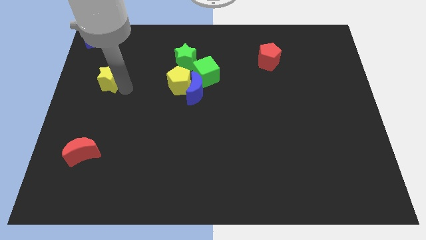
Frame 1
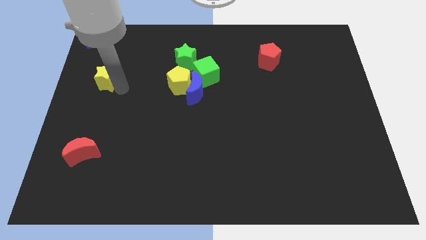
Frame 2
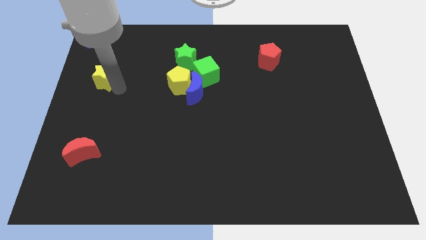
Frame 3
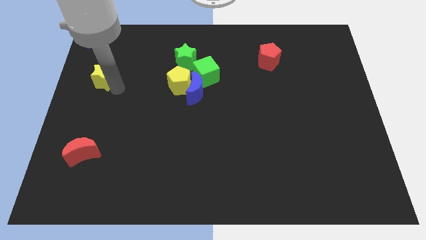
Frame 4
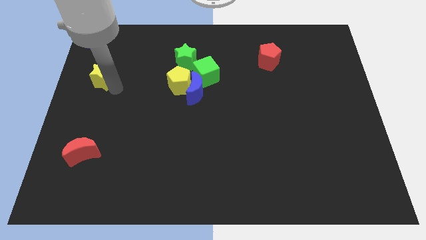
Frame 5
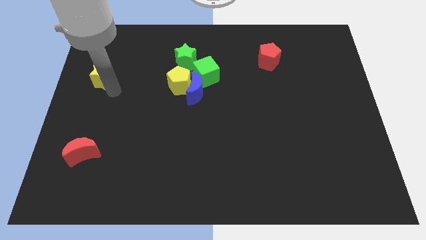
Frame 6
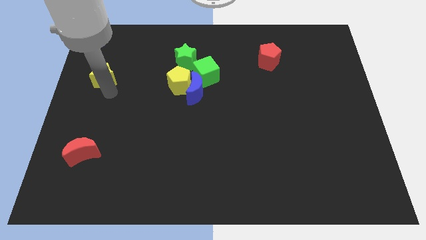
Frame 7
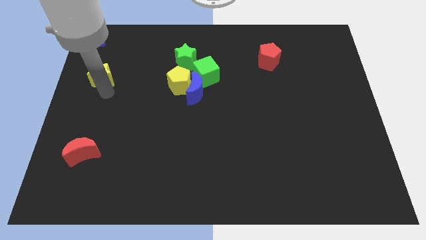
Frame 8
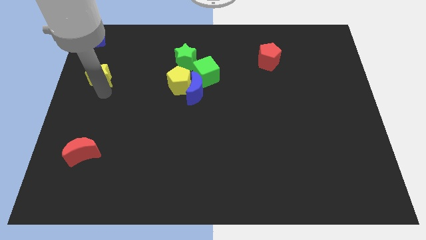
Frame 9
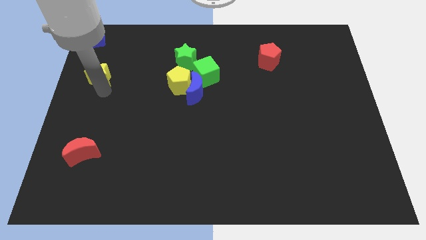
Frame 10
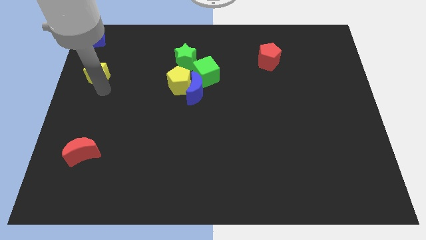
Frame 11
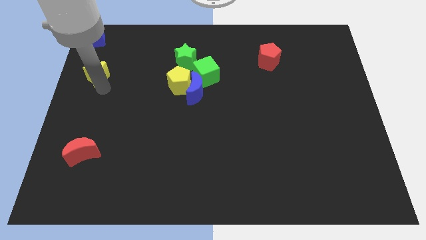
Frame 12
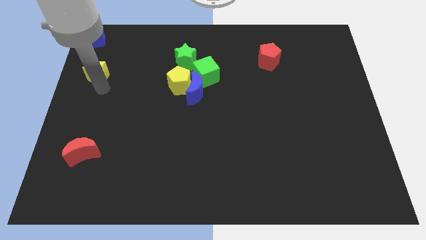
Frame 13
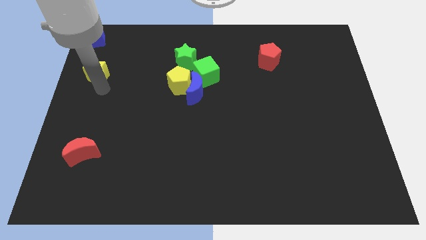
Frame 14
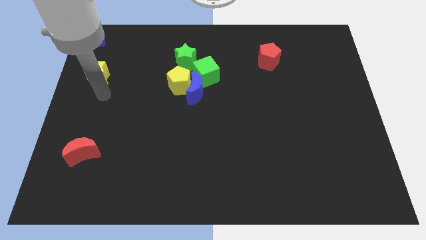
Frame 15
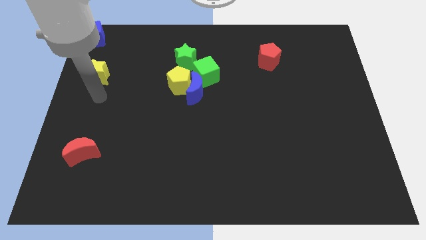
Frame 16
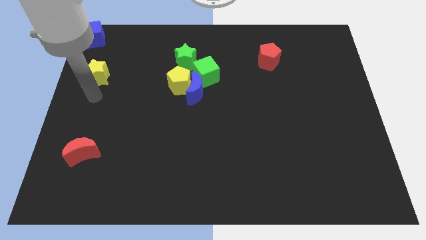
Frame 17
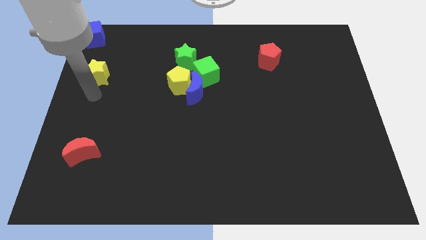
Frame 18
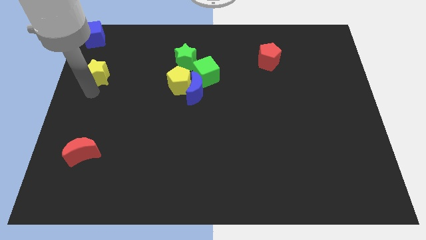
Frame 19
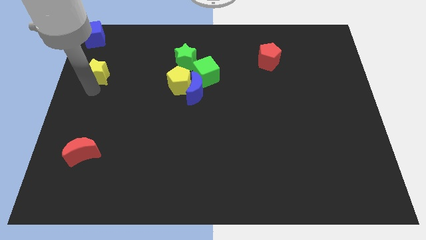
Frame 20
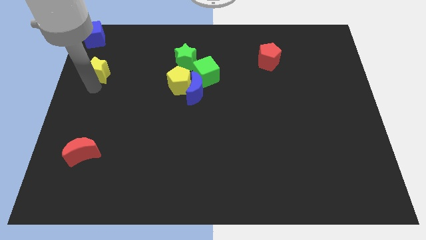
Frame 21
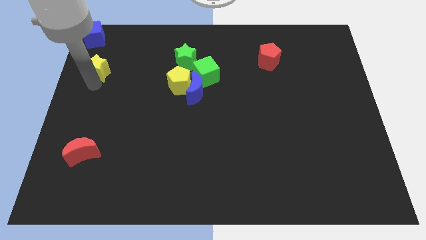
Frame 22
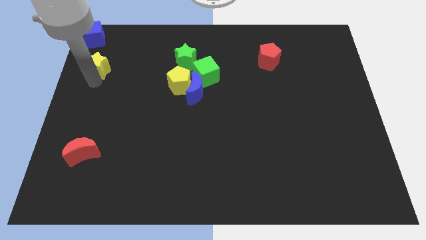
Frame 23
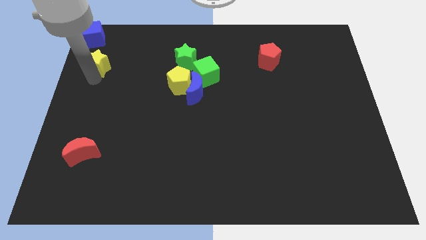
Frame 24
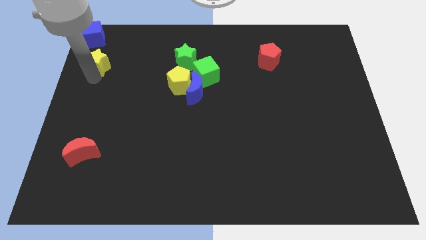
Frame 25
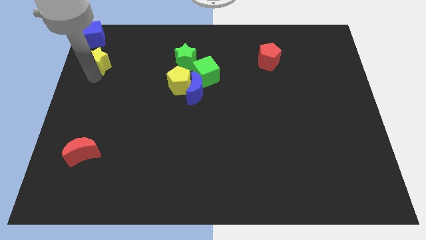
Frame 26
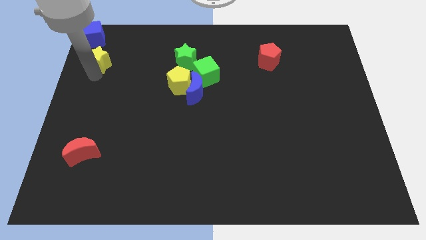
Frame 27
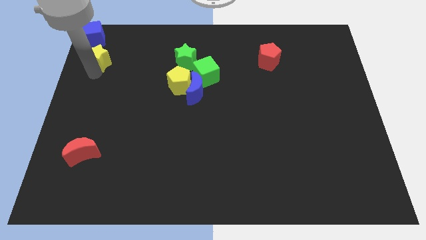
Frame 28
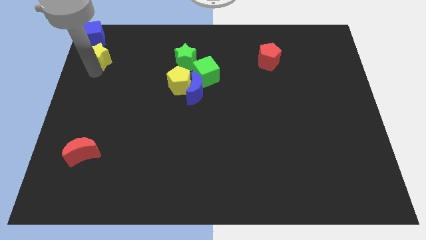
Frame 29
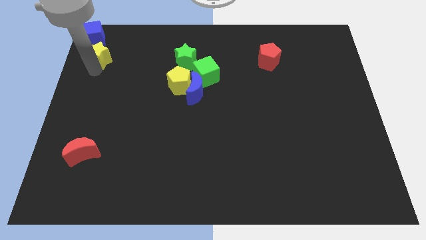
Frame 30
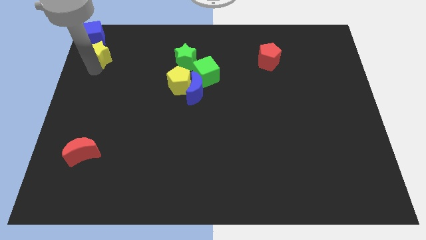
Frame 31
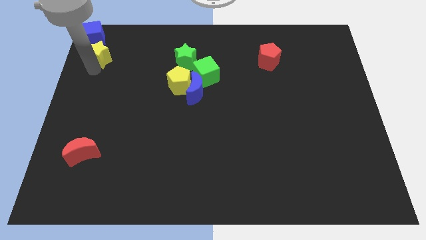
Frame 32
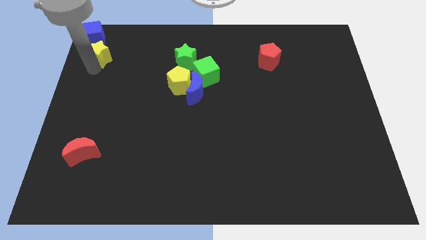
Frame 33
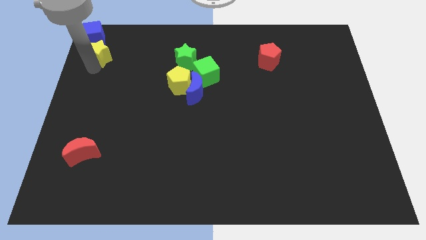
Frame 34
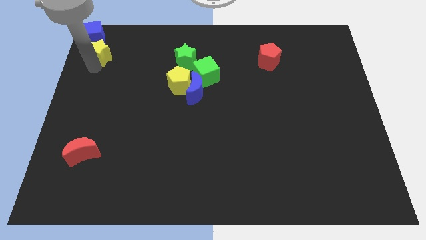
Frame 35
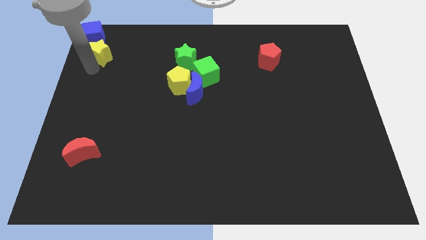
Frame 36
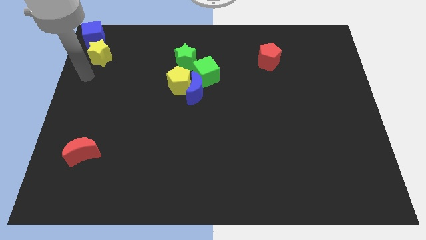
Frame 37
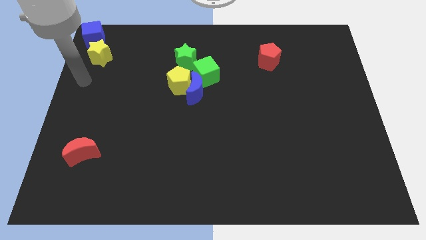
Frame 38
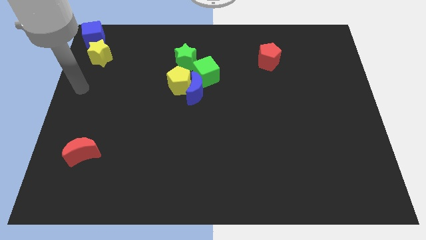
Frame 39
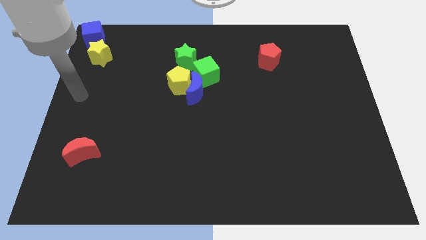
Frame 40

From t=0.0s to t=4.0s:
move yellow star at the bottom of blue cube

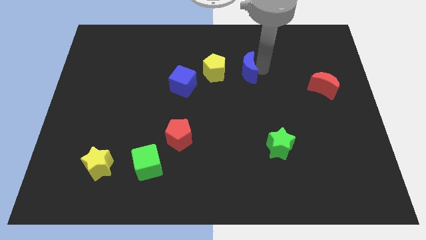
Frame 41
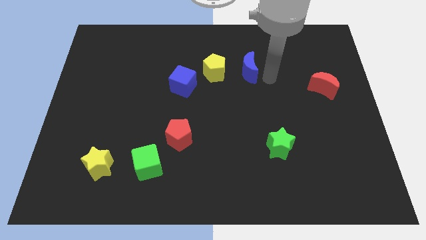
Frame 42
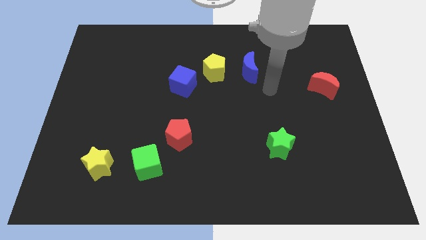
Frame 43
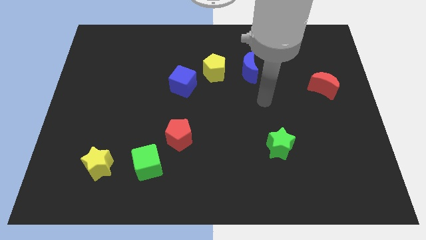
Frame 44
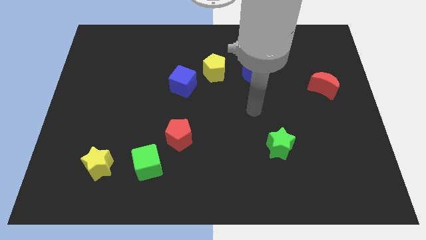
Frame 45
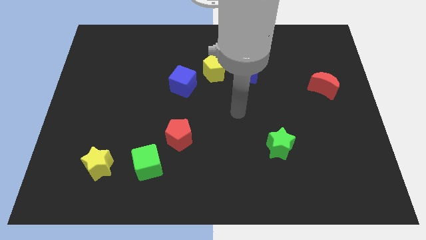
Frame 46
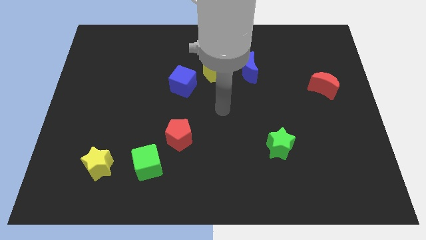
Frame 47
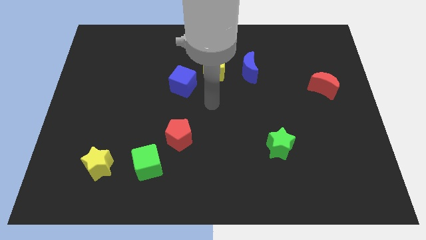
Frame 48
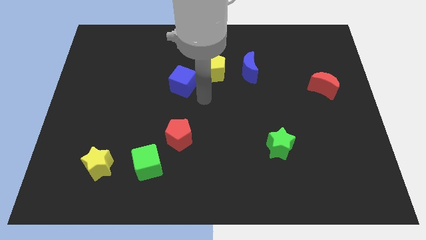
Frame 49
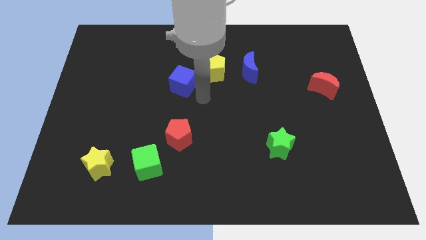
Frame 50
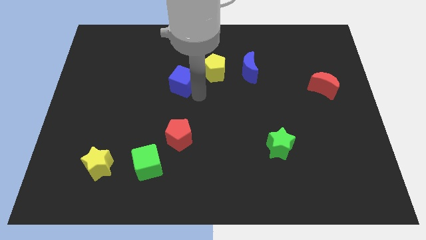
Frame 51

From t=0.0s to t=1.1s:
go and touch the right side of the blue cube

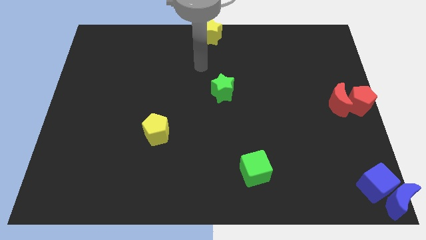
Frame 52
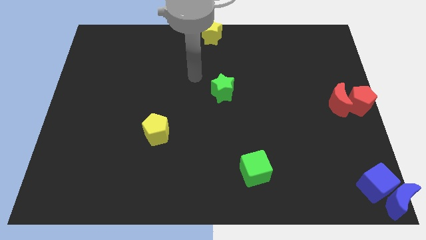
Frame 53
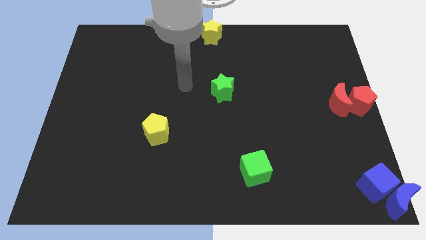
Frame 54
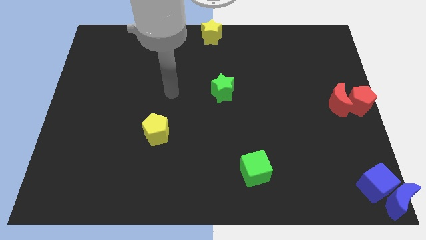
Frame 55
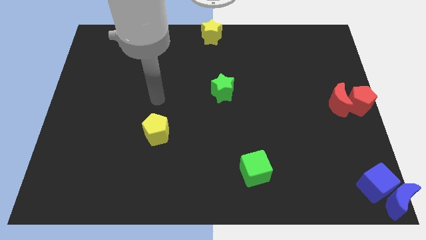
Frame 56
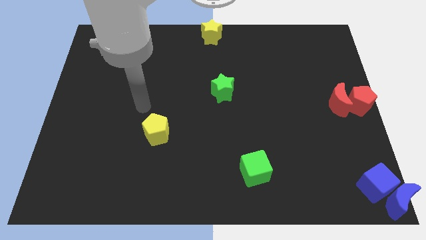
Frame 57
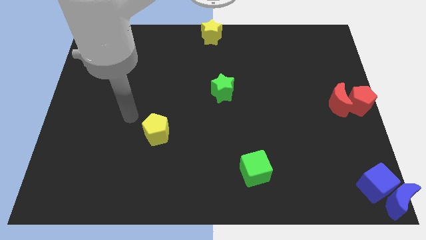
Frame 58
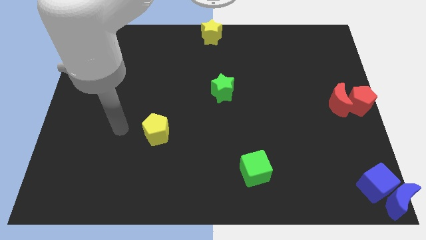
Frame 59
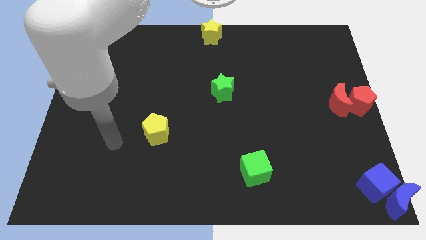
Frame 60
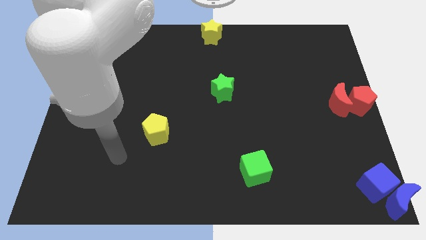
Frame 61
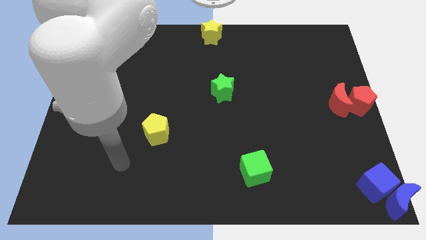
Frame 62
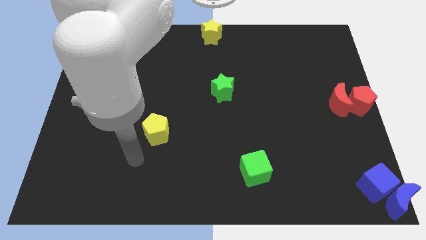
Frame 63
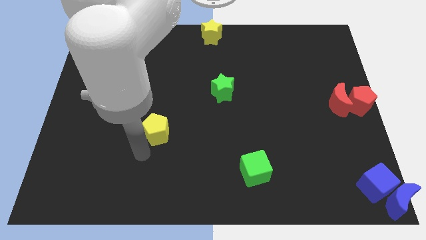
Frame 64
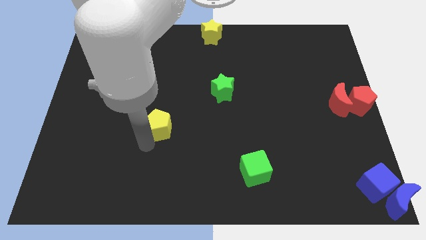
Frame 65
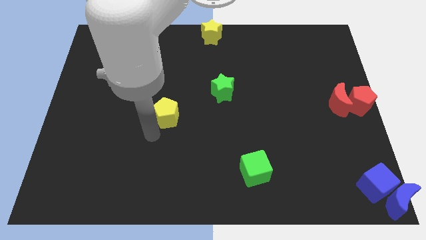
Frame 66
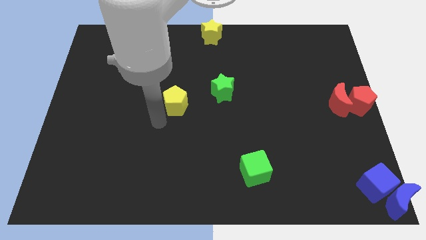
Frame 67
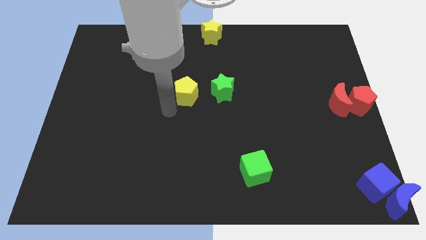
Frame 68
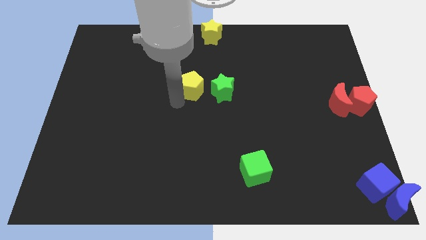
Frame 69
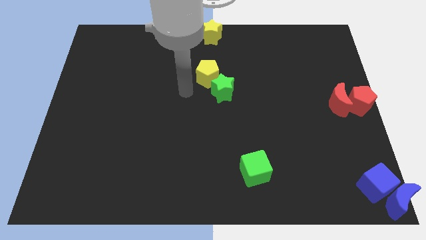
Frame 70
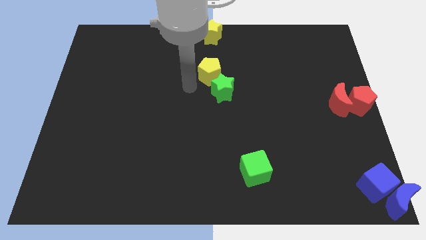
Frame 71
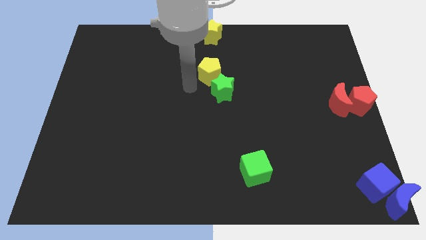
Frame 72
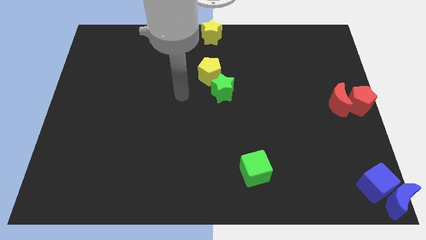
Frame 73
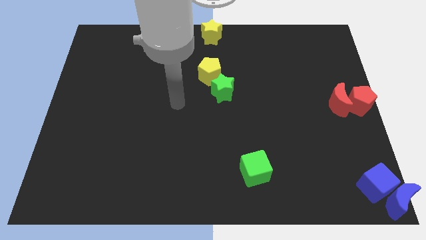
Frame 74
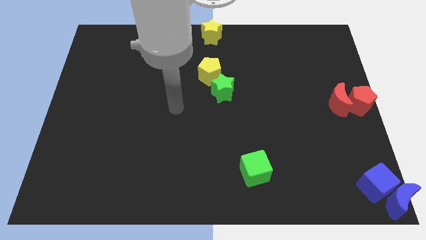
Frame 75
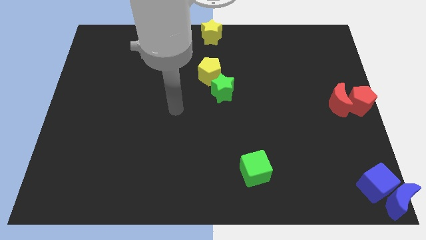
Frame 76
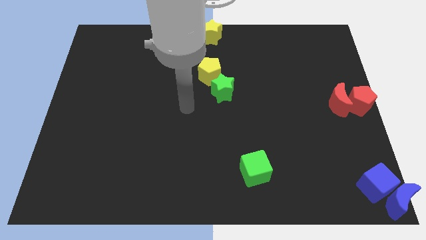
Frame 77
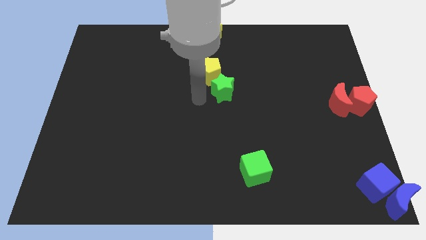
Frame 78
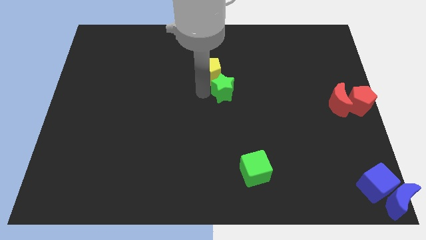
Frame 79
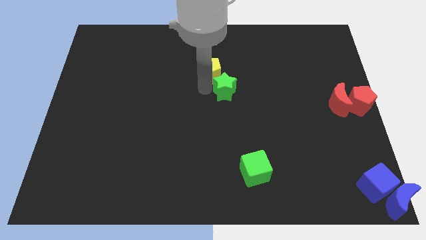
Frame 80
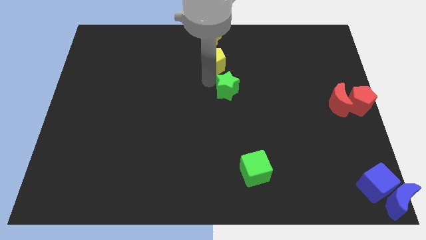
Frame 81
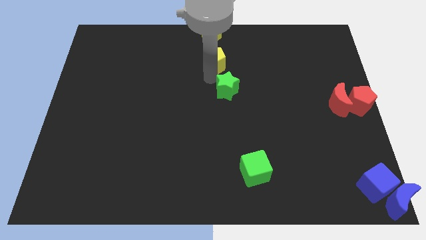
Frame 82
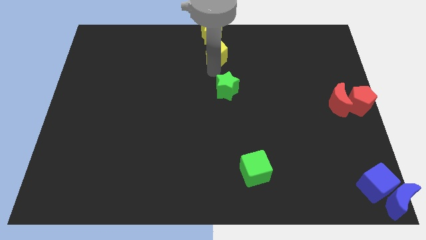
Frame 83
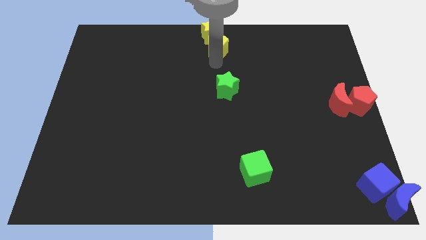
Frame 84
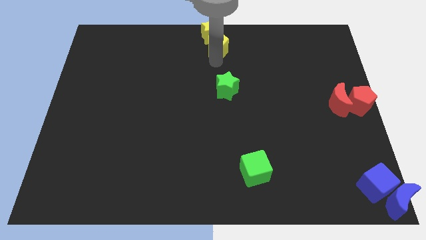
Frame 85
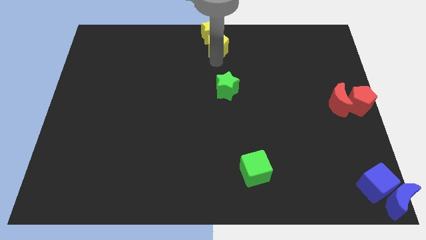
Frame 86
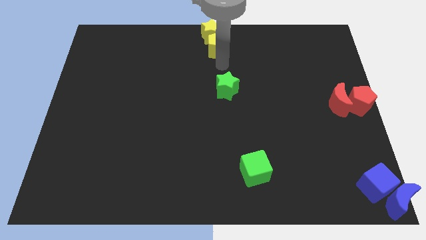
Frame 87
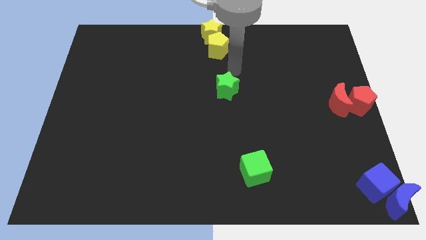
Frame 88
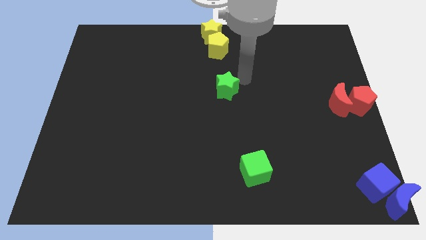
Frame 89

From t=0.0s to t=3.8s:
push the yellow pentagon into the yellow star
